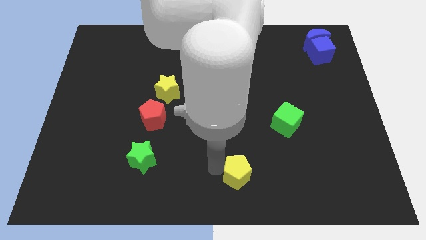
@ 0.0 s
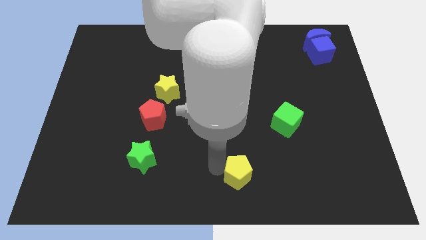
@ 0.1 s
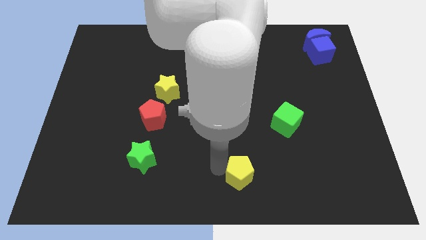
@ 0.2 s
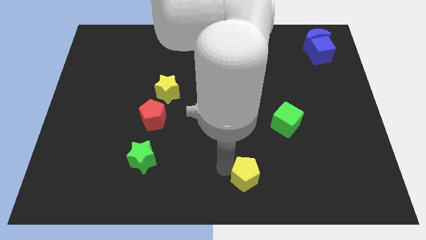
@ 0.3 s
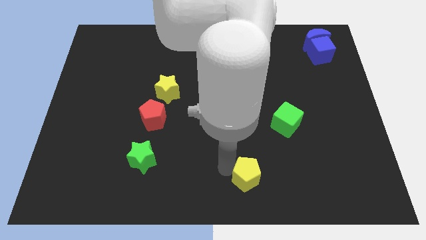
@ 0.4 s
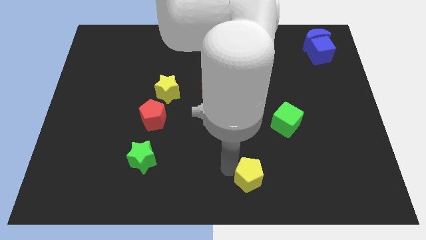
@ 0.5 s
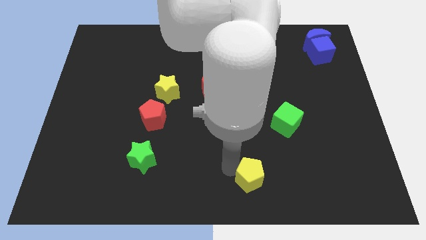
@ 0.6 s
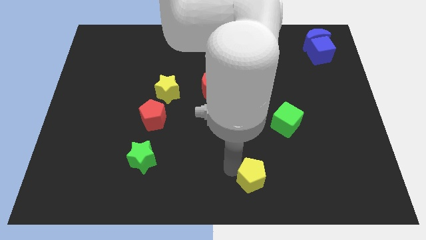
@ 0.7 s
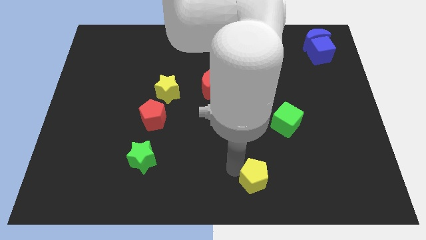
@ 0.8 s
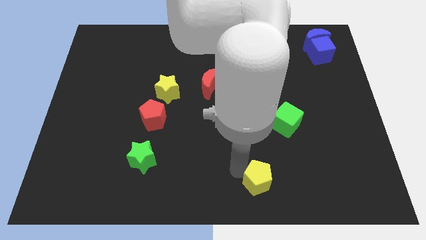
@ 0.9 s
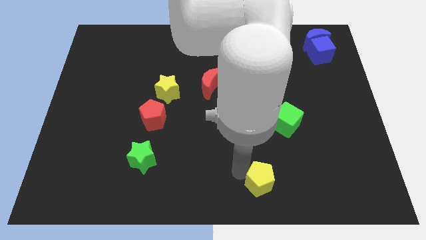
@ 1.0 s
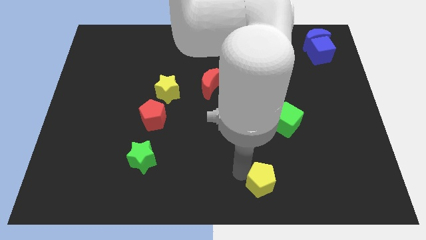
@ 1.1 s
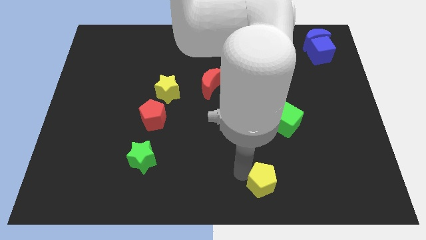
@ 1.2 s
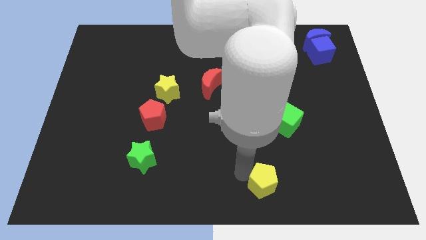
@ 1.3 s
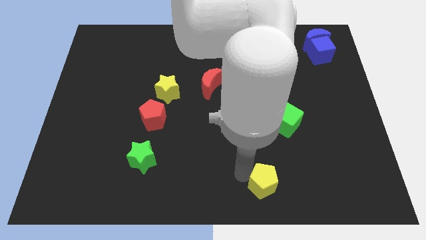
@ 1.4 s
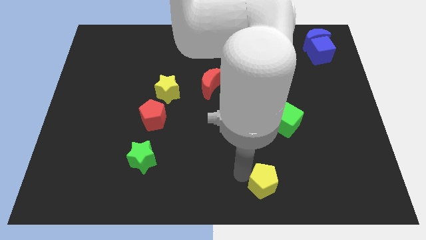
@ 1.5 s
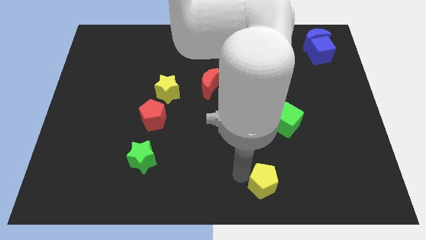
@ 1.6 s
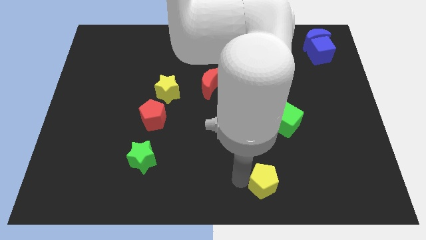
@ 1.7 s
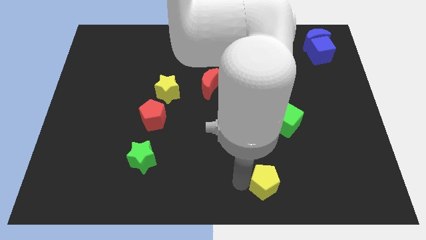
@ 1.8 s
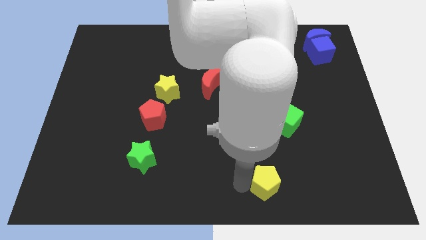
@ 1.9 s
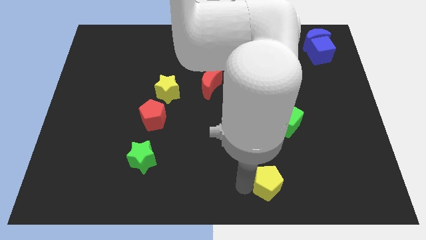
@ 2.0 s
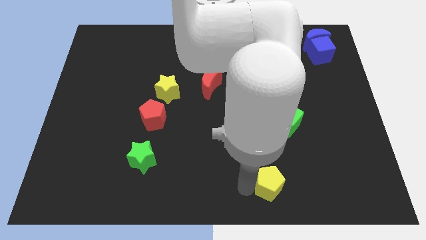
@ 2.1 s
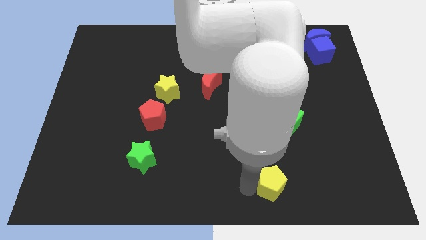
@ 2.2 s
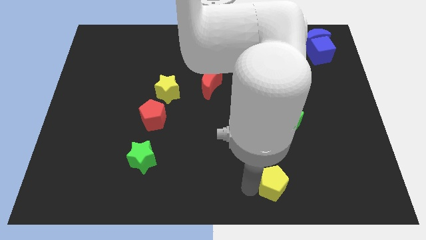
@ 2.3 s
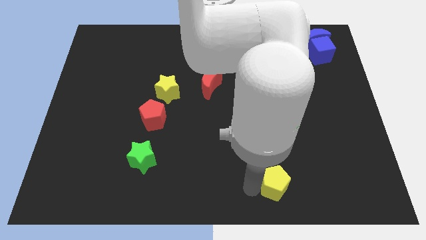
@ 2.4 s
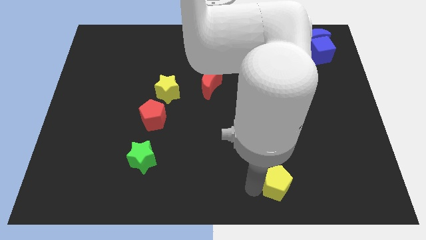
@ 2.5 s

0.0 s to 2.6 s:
push the yellow pentagon to the bottom of the green cube

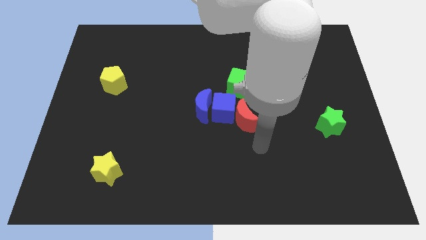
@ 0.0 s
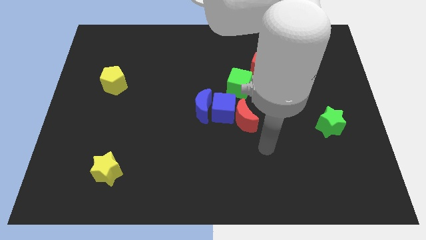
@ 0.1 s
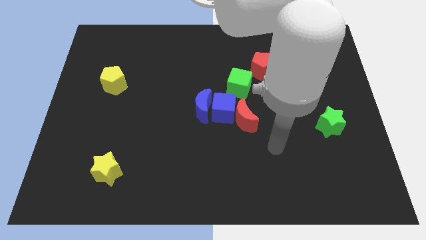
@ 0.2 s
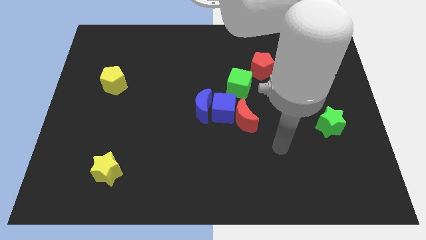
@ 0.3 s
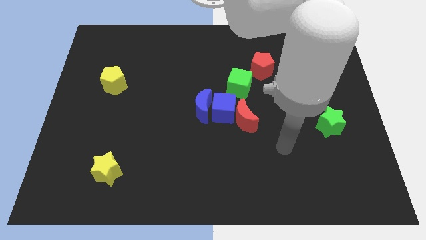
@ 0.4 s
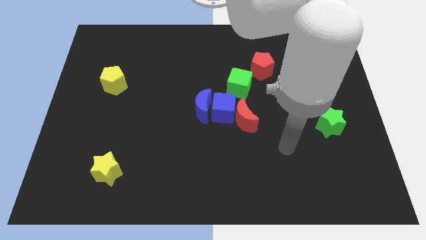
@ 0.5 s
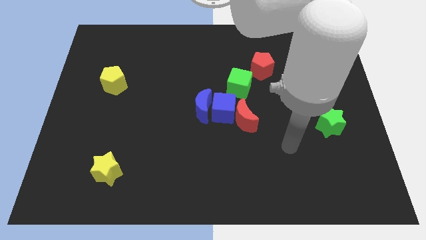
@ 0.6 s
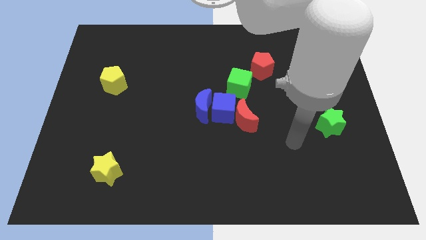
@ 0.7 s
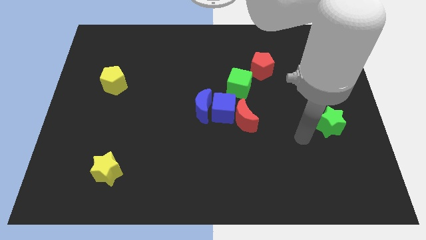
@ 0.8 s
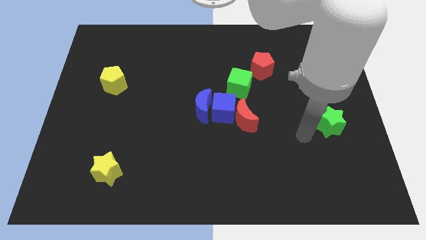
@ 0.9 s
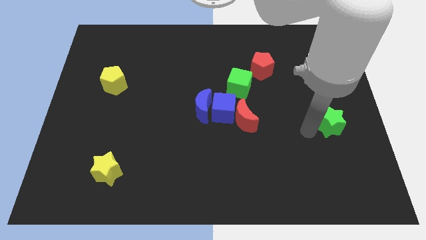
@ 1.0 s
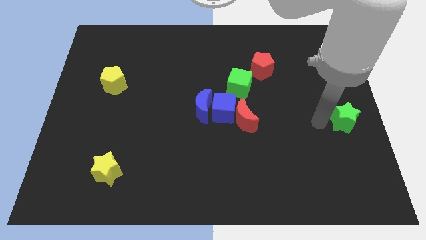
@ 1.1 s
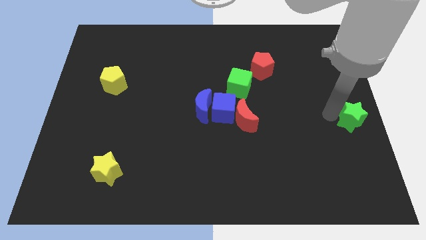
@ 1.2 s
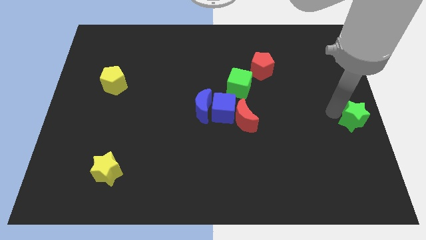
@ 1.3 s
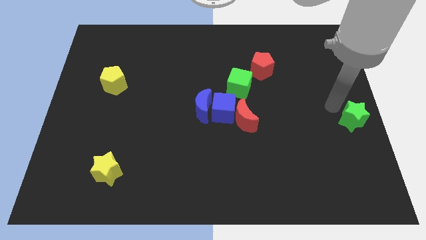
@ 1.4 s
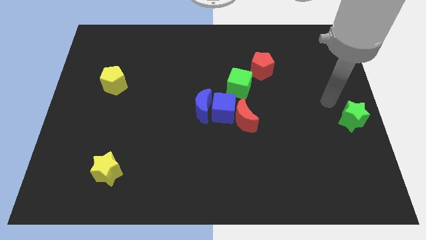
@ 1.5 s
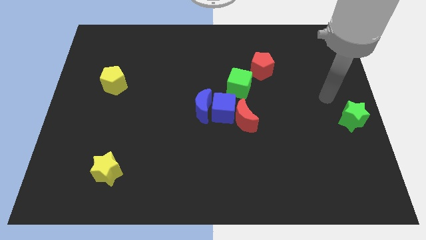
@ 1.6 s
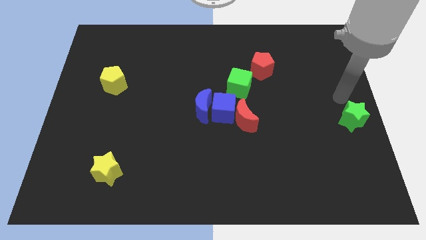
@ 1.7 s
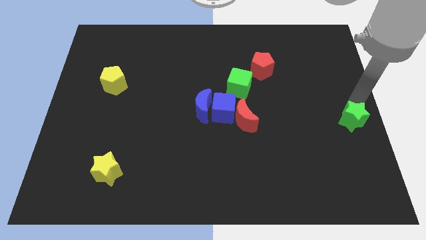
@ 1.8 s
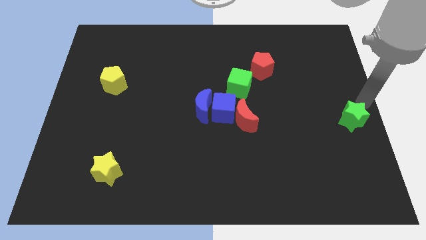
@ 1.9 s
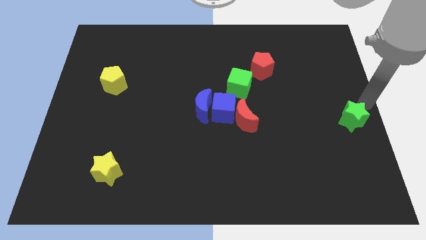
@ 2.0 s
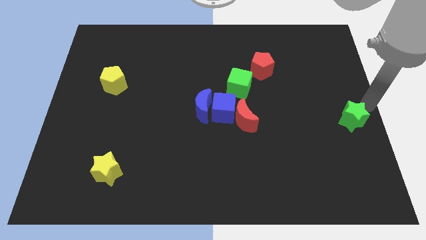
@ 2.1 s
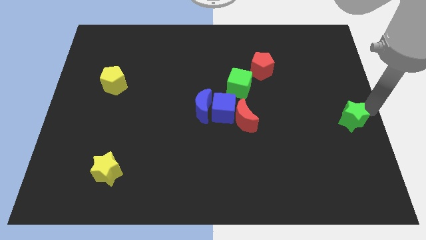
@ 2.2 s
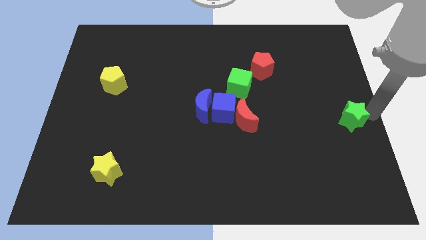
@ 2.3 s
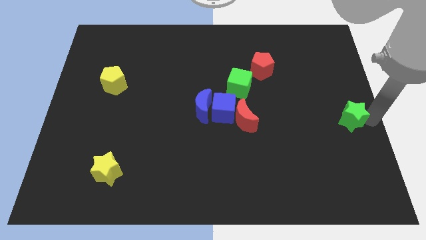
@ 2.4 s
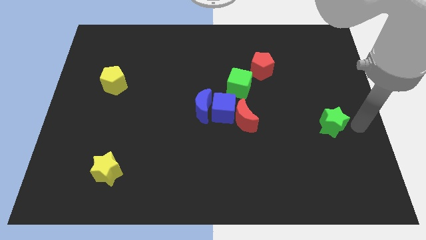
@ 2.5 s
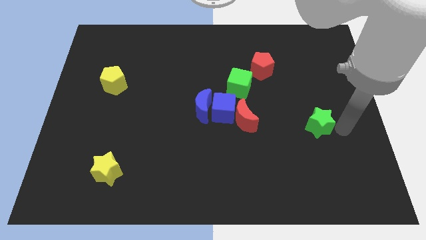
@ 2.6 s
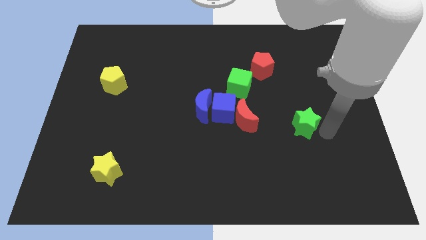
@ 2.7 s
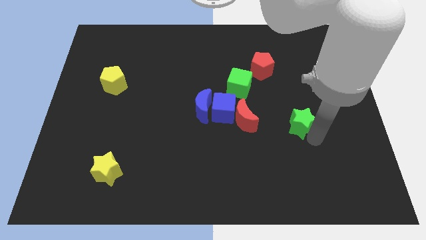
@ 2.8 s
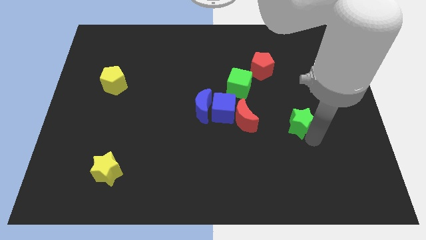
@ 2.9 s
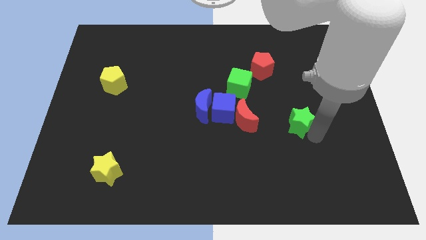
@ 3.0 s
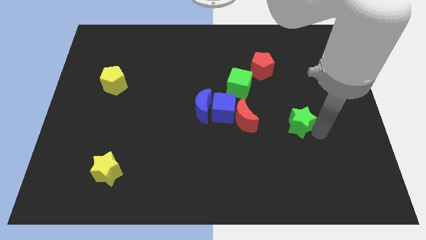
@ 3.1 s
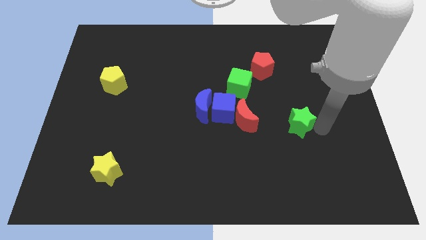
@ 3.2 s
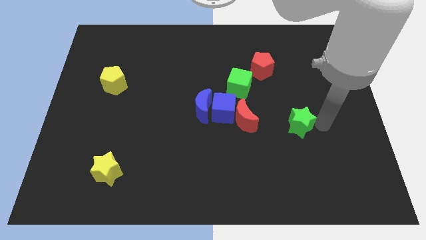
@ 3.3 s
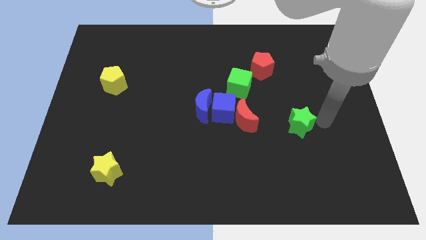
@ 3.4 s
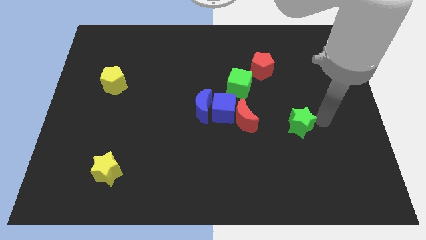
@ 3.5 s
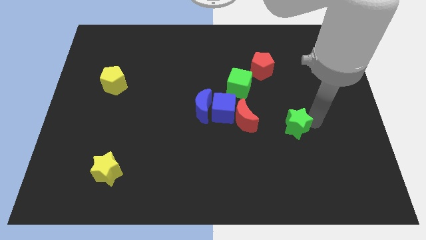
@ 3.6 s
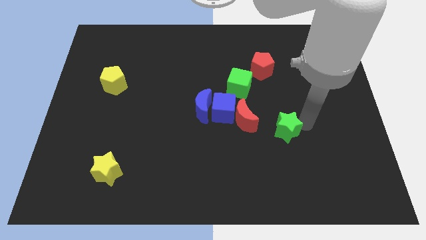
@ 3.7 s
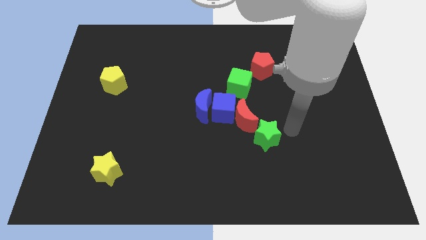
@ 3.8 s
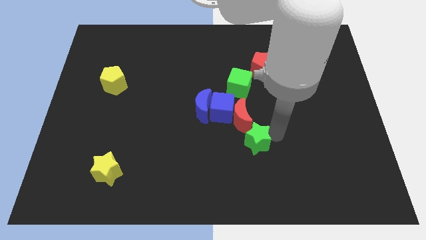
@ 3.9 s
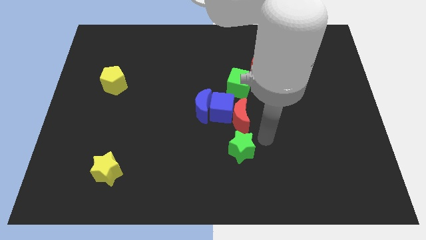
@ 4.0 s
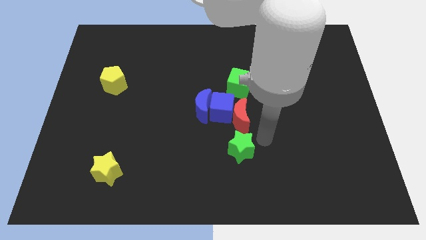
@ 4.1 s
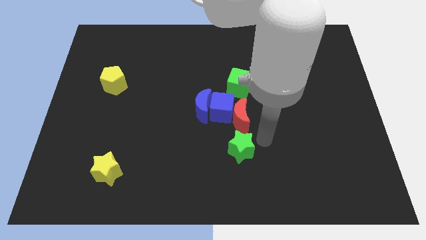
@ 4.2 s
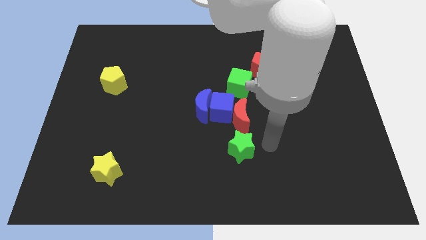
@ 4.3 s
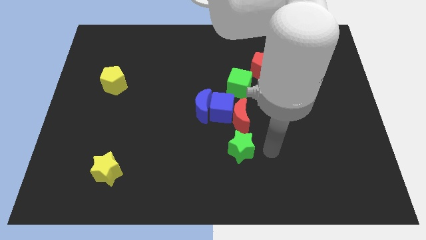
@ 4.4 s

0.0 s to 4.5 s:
place the green star below the red moon

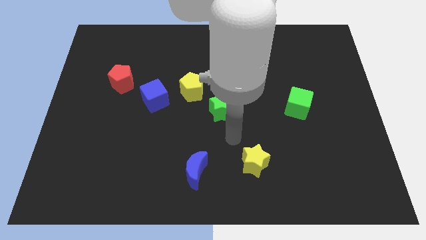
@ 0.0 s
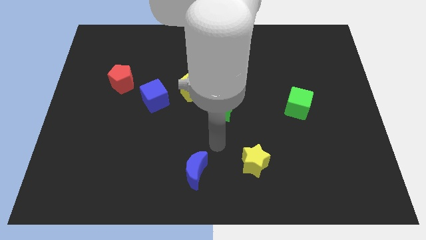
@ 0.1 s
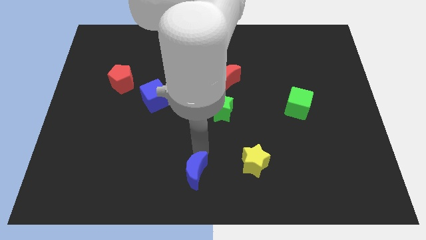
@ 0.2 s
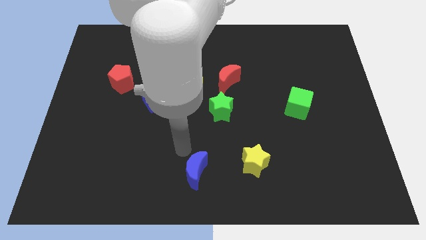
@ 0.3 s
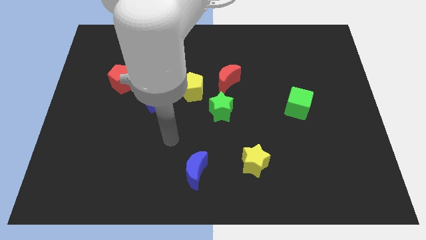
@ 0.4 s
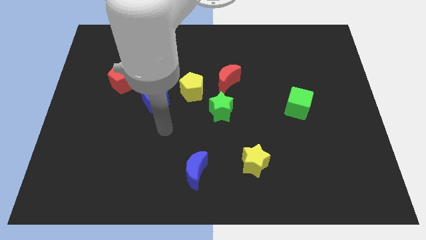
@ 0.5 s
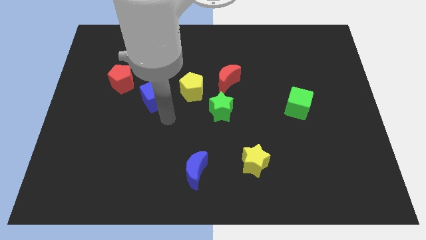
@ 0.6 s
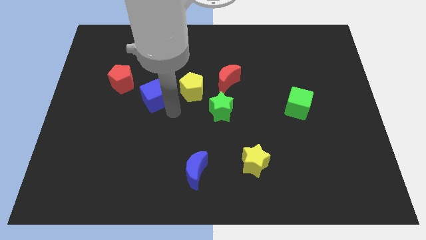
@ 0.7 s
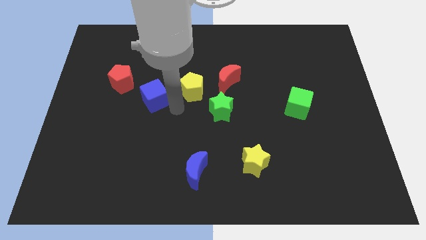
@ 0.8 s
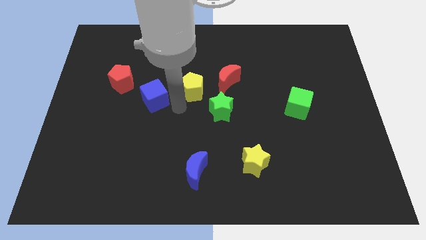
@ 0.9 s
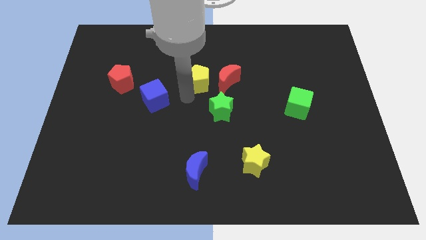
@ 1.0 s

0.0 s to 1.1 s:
tap your arm to the bottom side of yellow pentagon

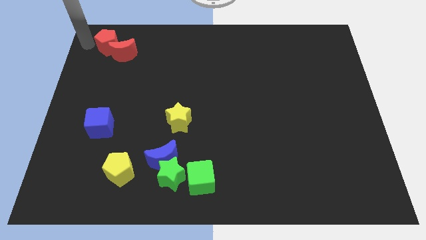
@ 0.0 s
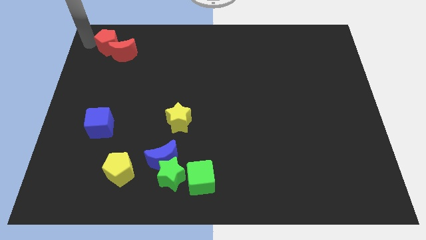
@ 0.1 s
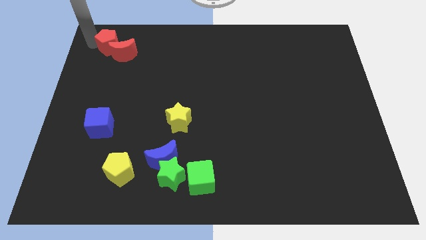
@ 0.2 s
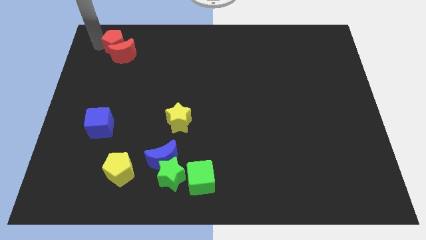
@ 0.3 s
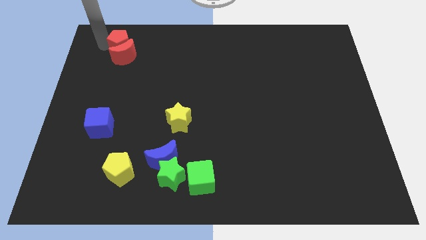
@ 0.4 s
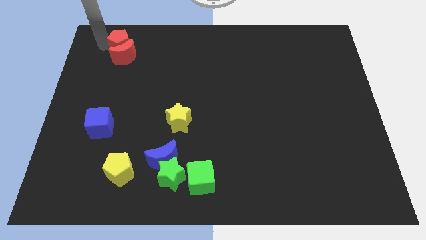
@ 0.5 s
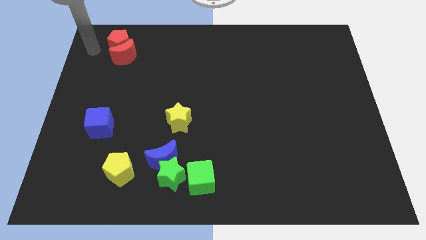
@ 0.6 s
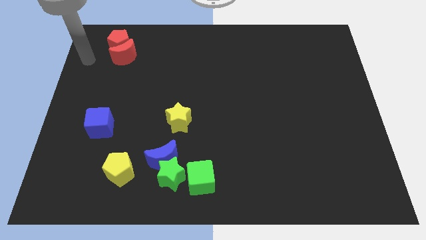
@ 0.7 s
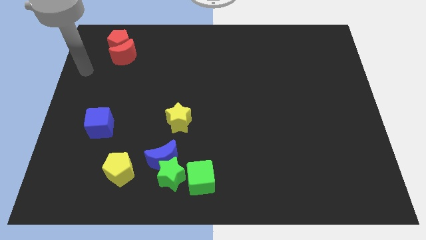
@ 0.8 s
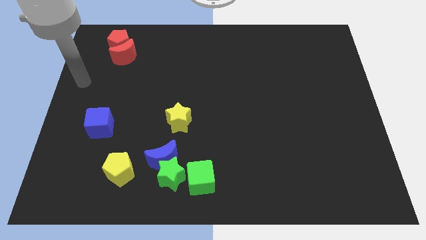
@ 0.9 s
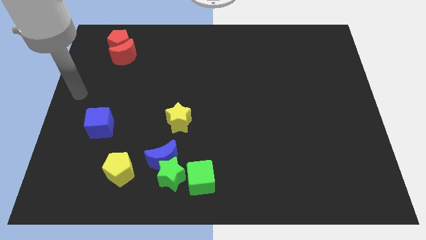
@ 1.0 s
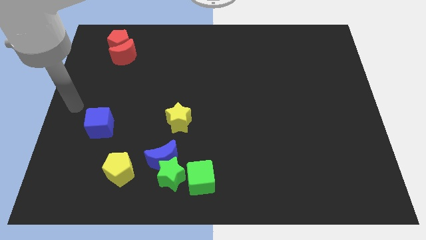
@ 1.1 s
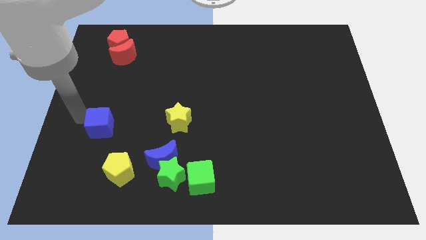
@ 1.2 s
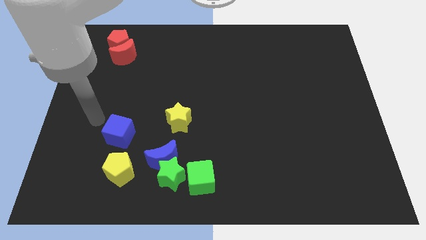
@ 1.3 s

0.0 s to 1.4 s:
move the red pentagon above the red crescent
